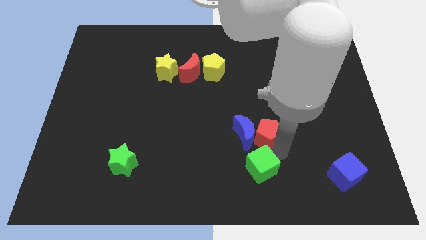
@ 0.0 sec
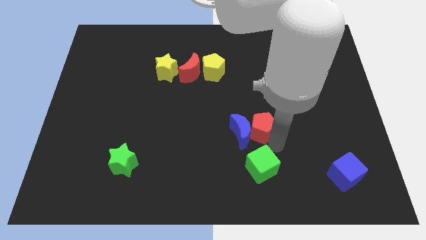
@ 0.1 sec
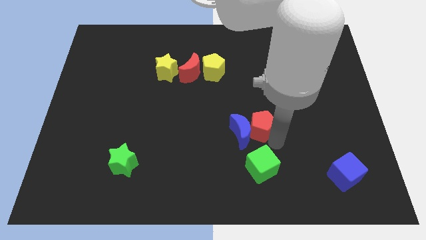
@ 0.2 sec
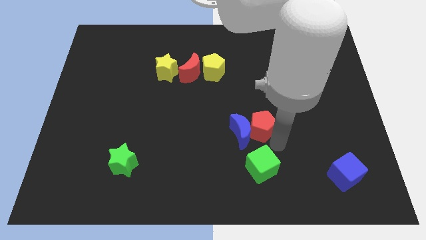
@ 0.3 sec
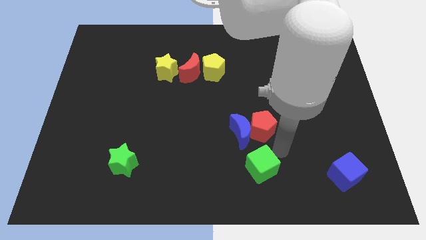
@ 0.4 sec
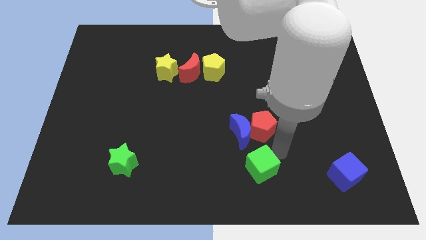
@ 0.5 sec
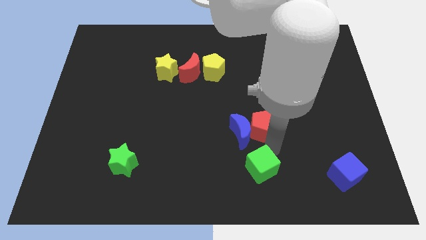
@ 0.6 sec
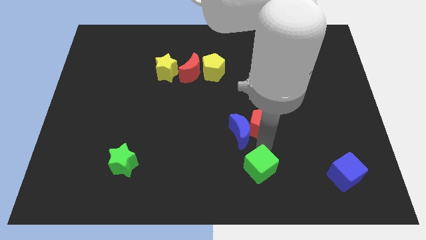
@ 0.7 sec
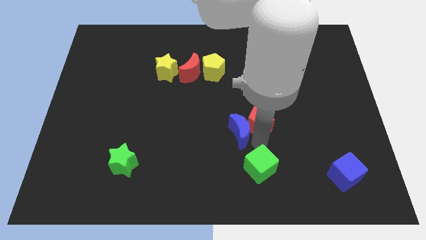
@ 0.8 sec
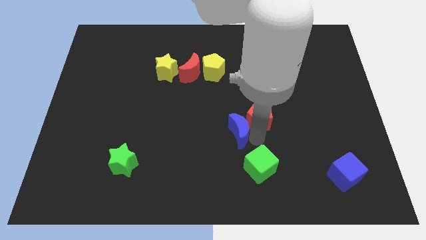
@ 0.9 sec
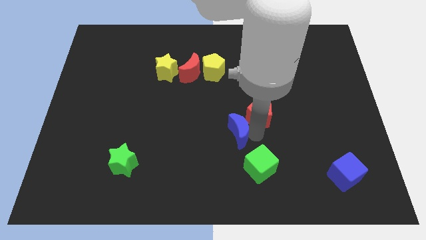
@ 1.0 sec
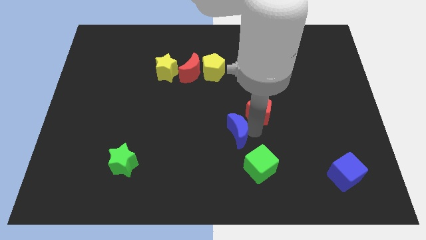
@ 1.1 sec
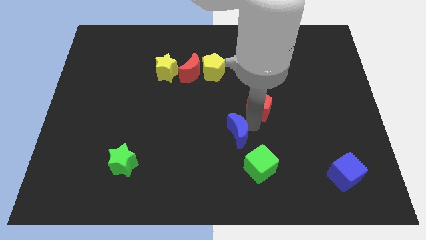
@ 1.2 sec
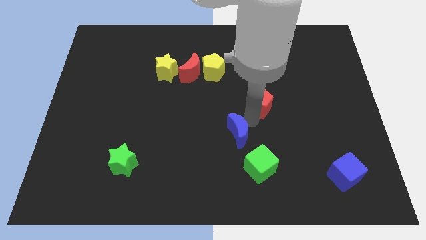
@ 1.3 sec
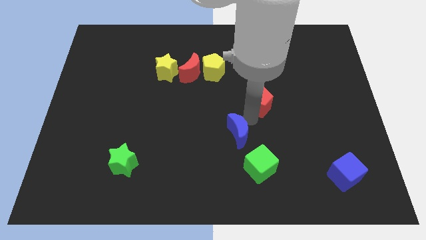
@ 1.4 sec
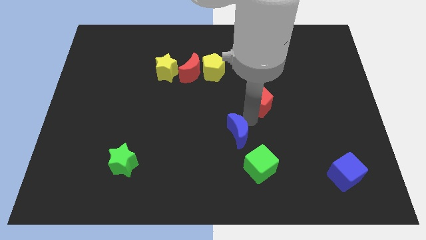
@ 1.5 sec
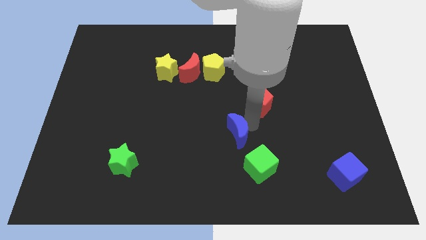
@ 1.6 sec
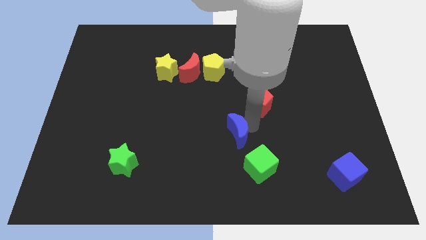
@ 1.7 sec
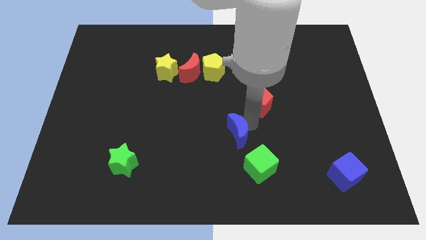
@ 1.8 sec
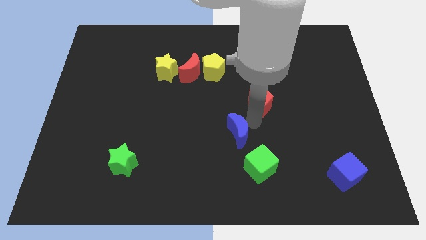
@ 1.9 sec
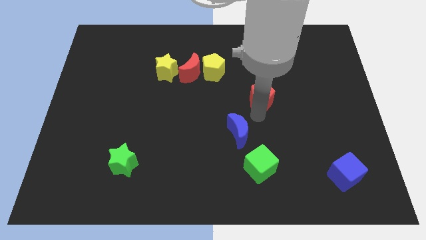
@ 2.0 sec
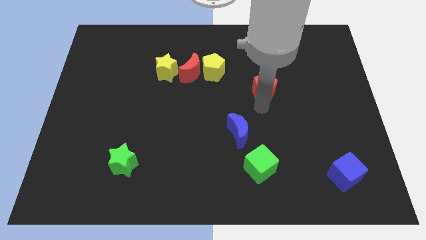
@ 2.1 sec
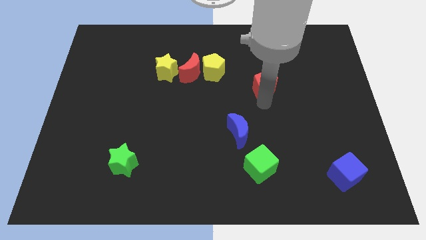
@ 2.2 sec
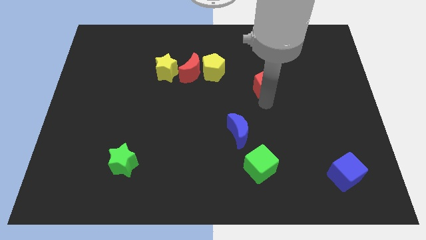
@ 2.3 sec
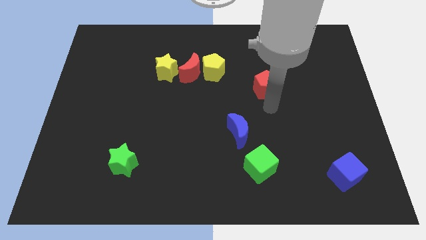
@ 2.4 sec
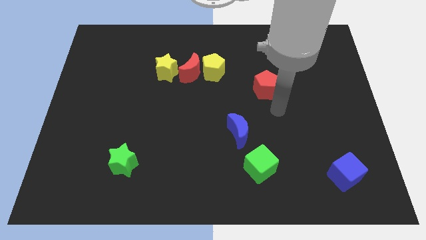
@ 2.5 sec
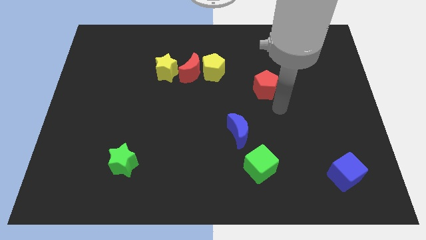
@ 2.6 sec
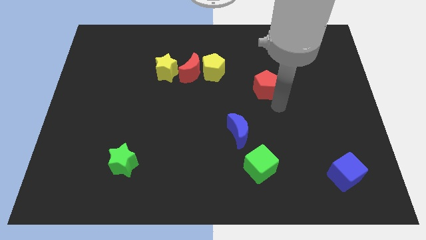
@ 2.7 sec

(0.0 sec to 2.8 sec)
place the red pentagon above the blue moon

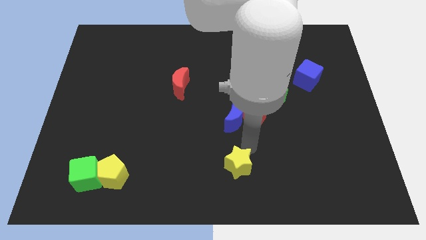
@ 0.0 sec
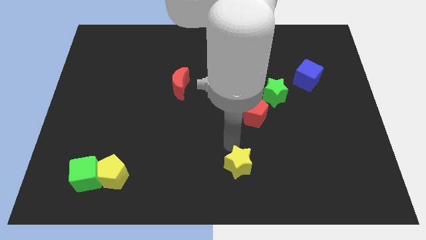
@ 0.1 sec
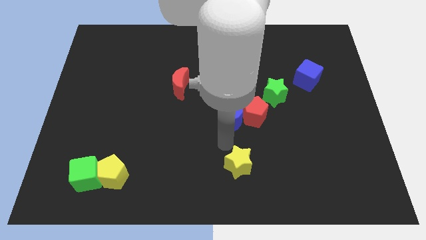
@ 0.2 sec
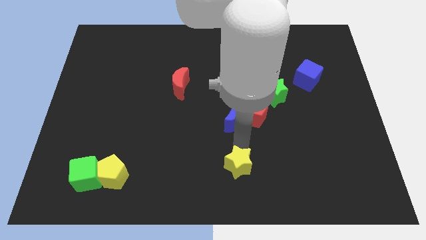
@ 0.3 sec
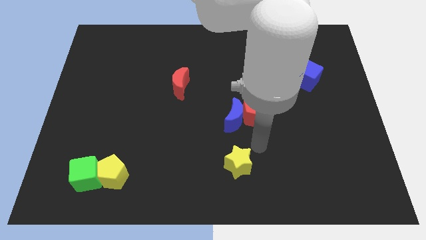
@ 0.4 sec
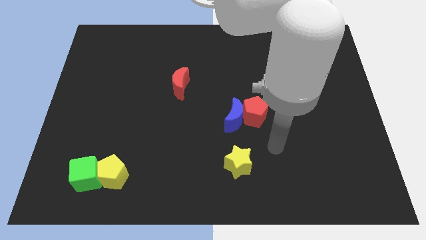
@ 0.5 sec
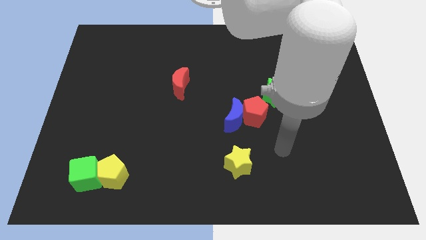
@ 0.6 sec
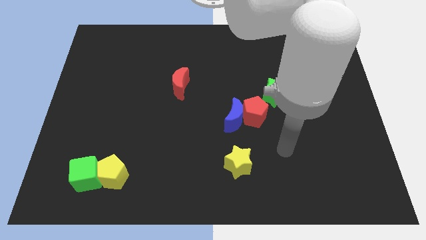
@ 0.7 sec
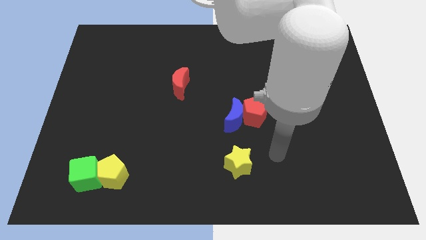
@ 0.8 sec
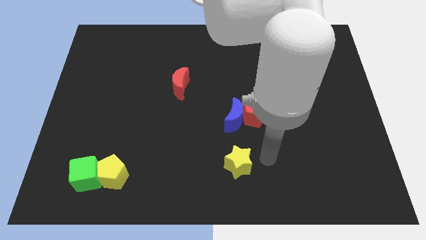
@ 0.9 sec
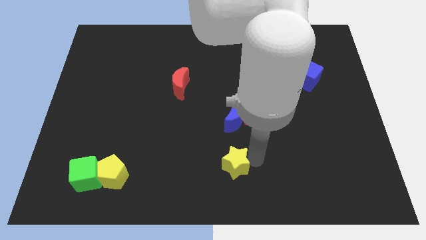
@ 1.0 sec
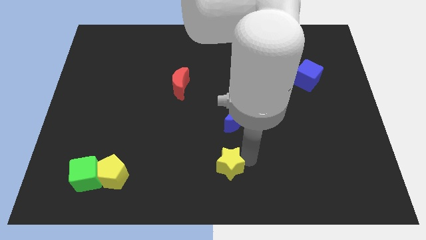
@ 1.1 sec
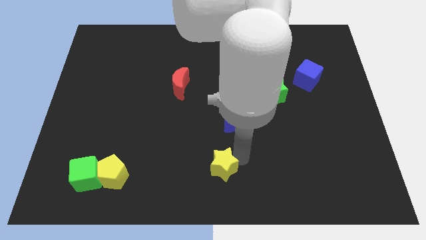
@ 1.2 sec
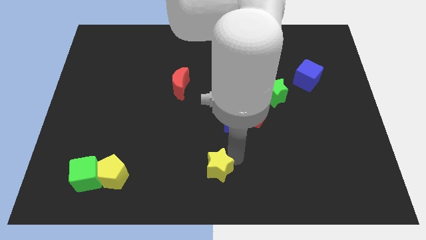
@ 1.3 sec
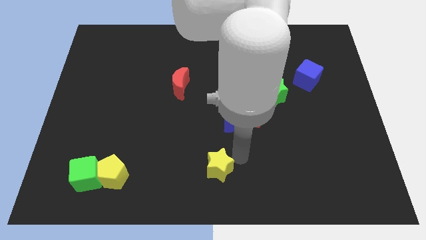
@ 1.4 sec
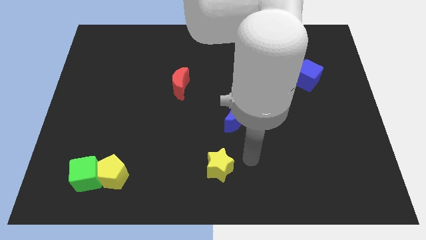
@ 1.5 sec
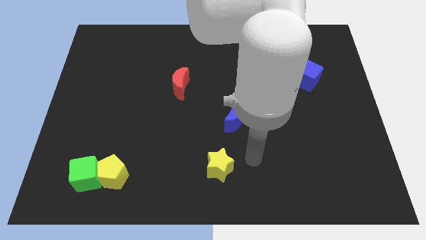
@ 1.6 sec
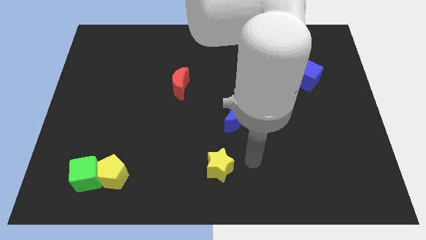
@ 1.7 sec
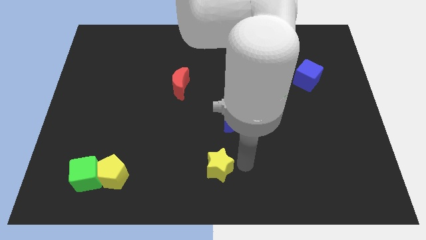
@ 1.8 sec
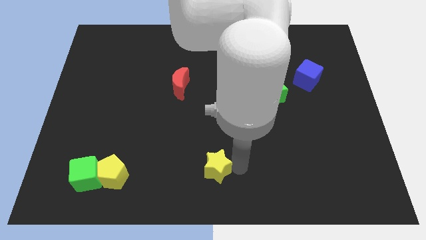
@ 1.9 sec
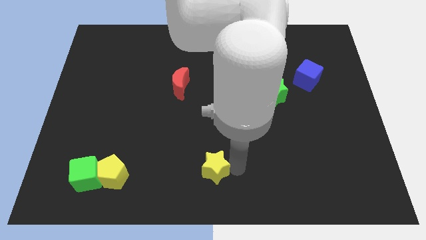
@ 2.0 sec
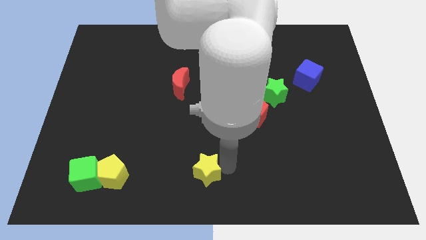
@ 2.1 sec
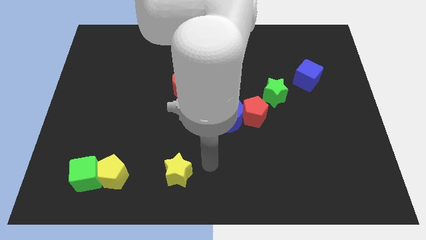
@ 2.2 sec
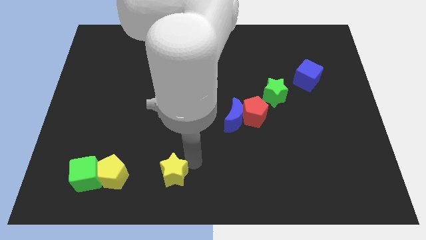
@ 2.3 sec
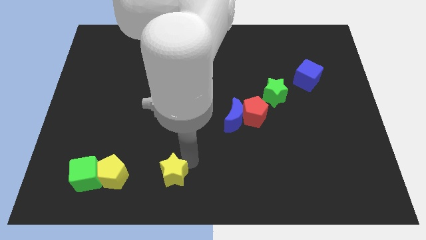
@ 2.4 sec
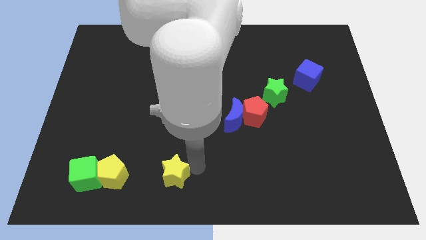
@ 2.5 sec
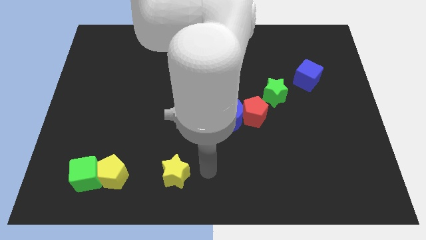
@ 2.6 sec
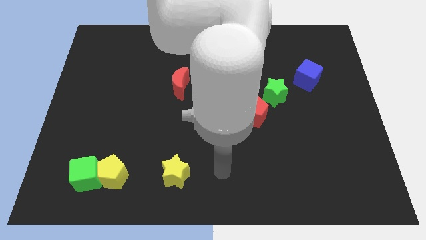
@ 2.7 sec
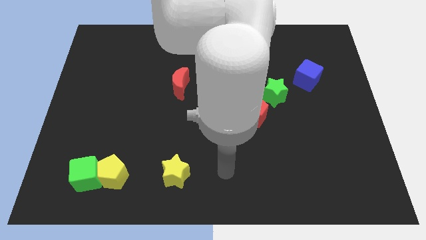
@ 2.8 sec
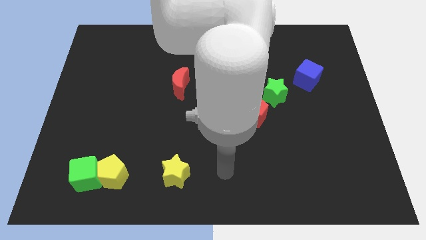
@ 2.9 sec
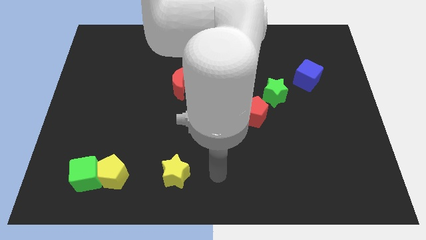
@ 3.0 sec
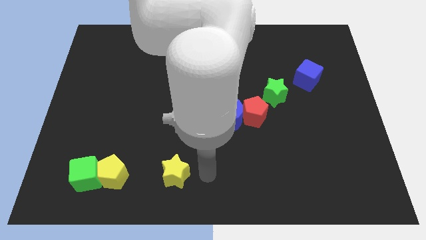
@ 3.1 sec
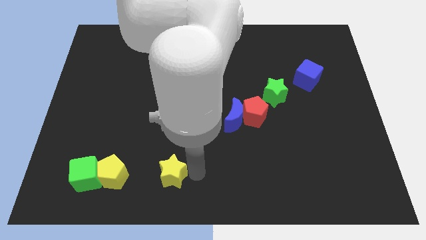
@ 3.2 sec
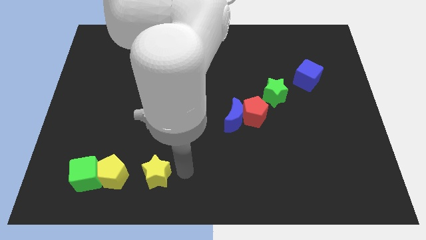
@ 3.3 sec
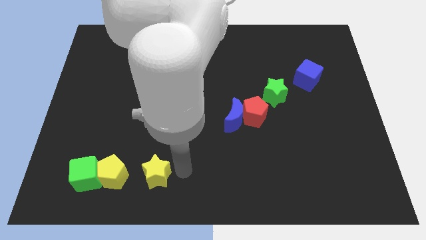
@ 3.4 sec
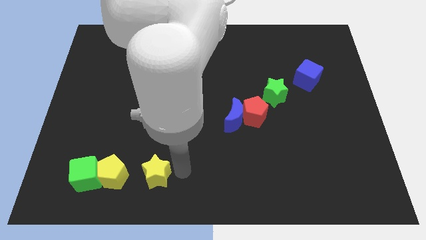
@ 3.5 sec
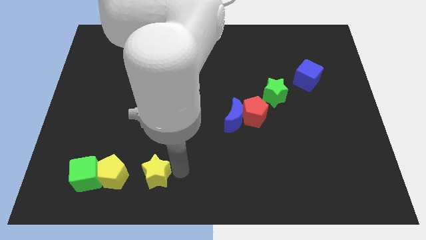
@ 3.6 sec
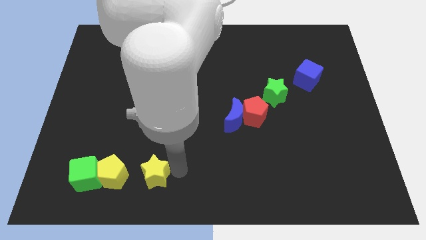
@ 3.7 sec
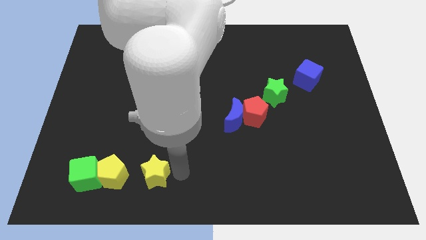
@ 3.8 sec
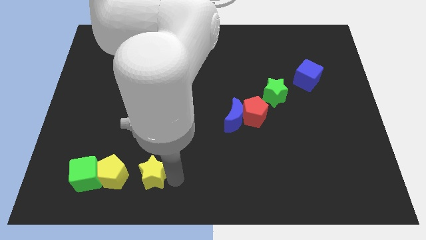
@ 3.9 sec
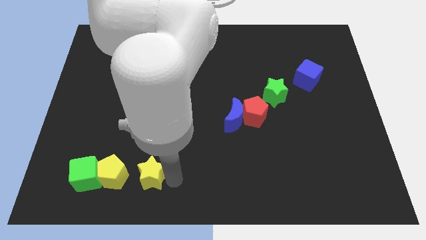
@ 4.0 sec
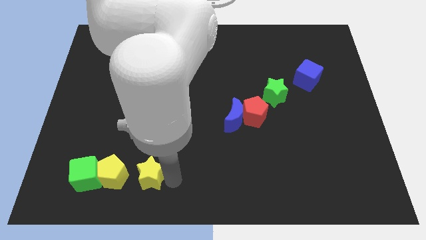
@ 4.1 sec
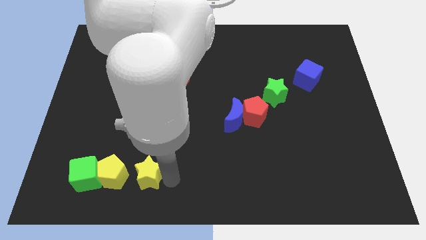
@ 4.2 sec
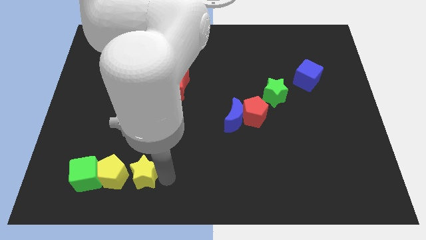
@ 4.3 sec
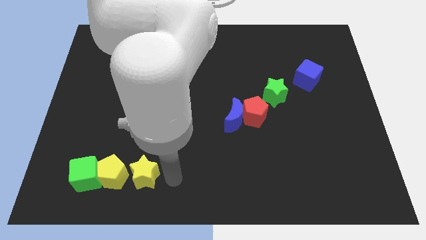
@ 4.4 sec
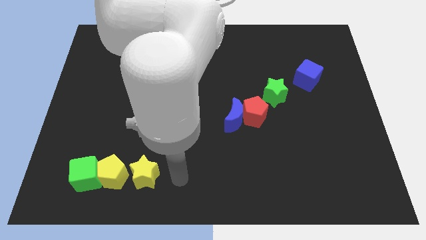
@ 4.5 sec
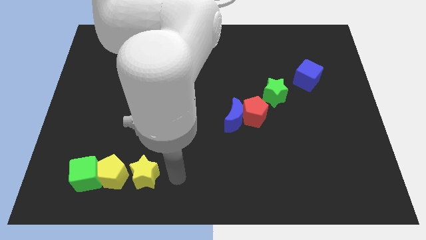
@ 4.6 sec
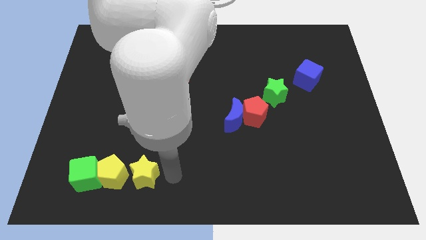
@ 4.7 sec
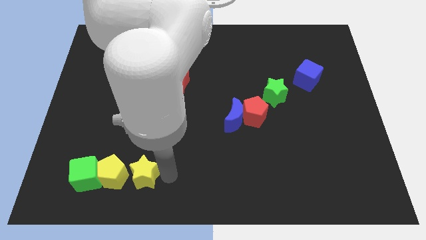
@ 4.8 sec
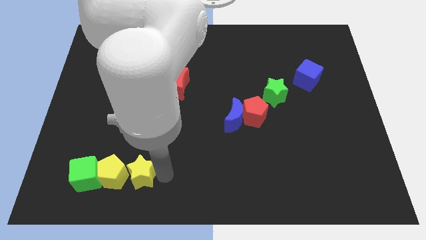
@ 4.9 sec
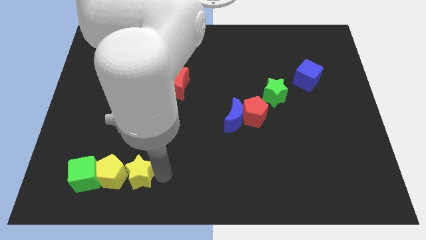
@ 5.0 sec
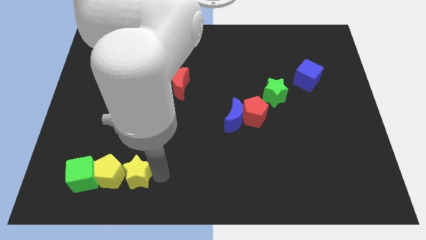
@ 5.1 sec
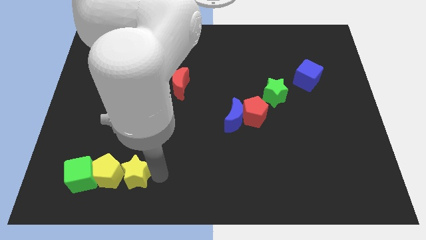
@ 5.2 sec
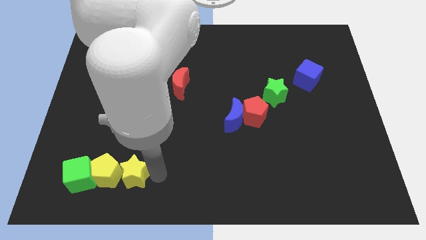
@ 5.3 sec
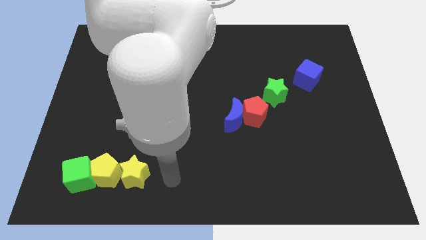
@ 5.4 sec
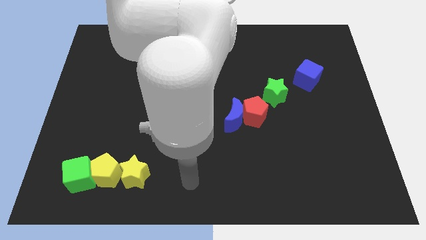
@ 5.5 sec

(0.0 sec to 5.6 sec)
place the yellow star right to the yellow pentagon

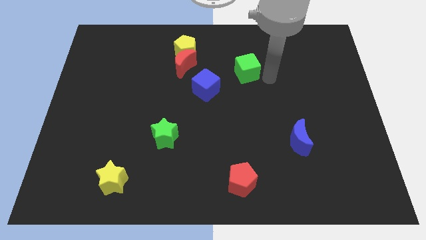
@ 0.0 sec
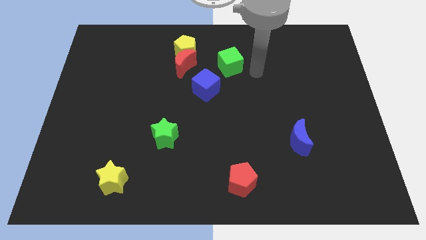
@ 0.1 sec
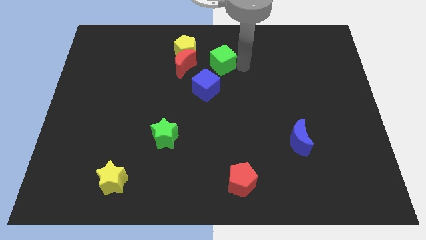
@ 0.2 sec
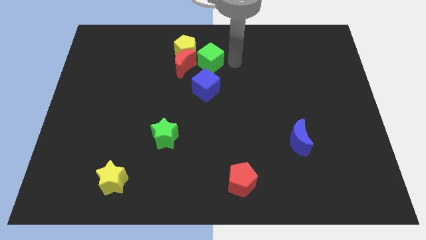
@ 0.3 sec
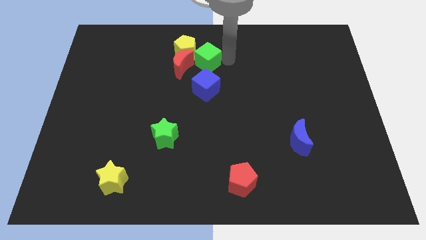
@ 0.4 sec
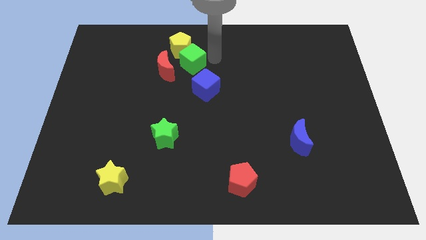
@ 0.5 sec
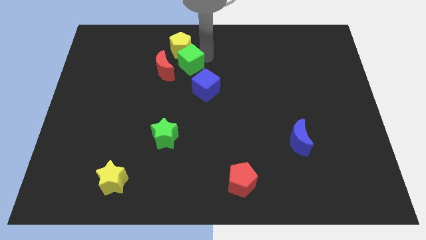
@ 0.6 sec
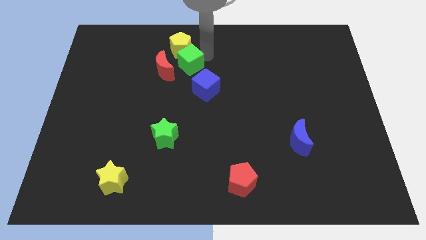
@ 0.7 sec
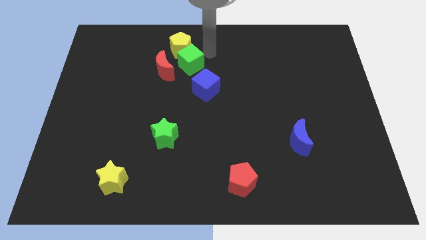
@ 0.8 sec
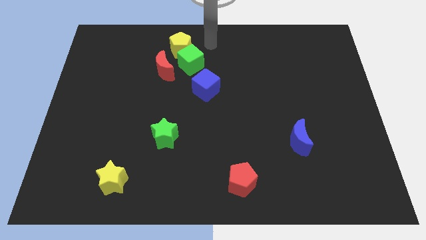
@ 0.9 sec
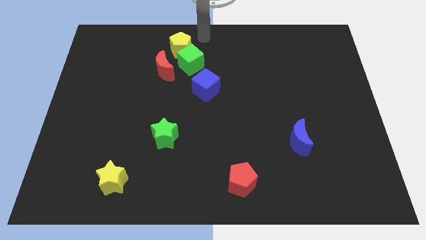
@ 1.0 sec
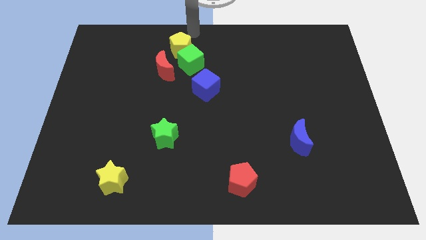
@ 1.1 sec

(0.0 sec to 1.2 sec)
push the green cube to the bottom of the yellow pentagon
